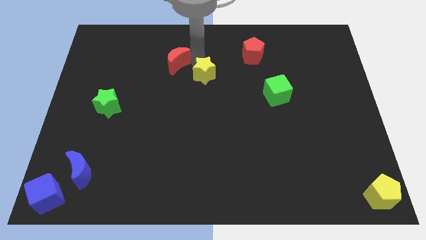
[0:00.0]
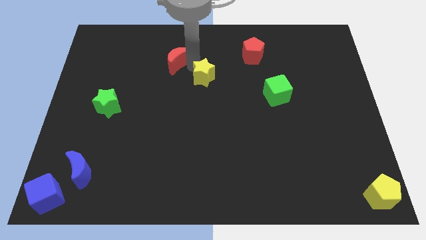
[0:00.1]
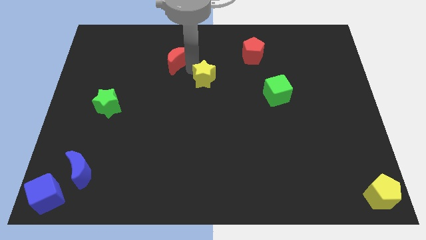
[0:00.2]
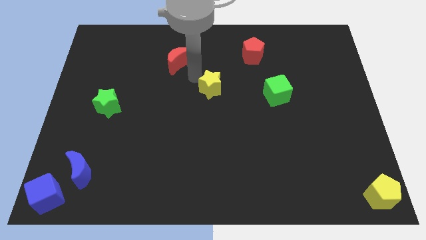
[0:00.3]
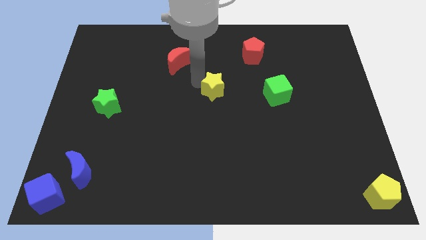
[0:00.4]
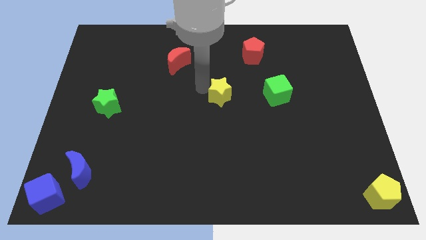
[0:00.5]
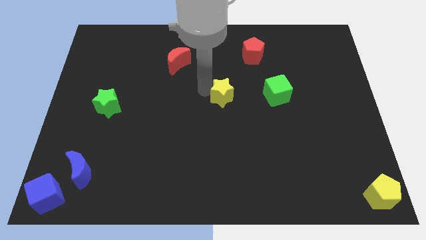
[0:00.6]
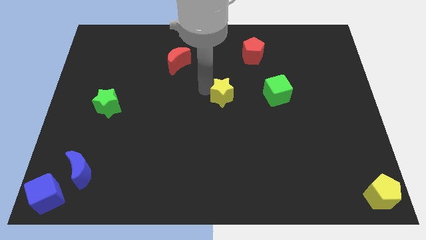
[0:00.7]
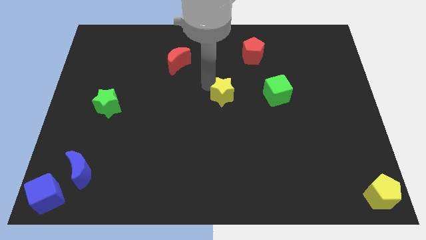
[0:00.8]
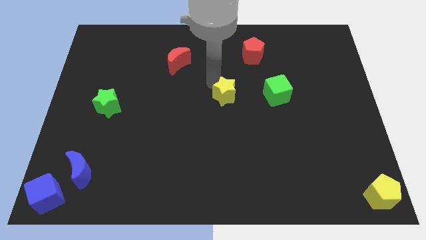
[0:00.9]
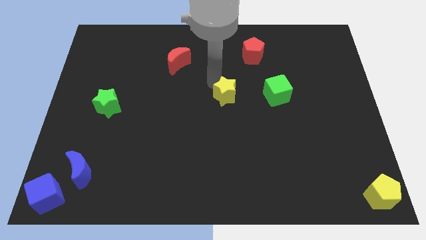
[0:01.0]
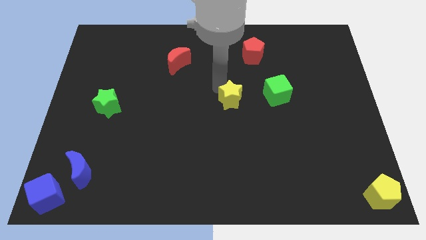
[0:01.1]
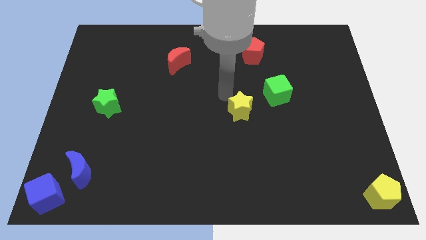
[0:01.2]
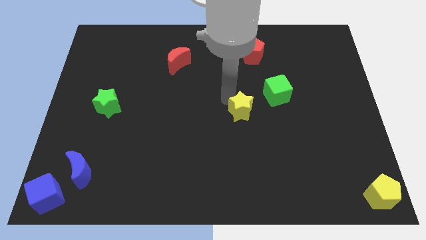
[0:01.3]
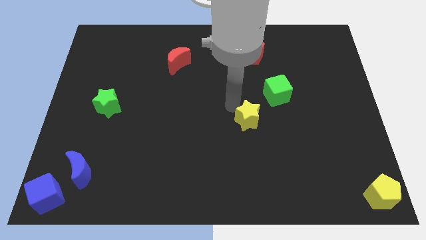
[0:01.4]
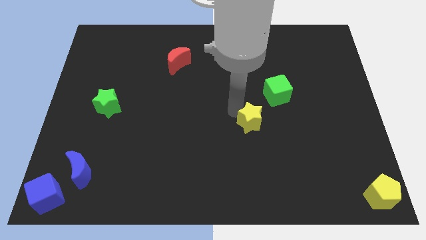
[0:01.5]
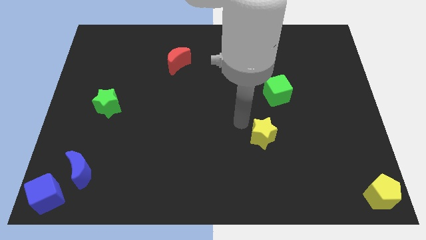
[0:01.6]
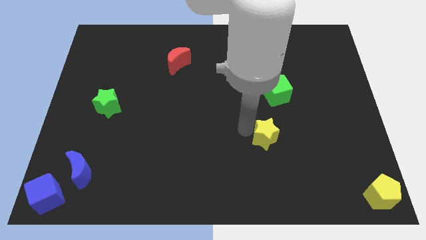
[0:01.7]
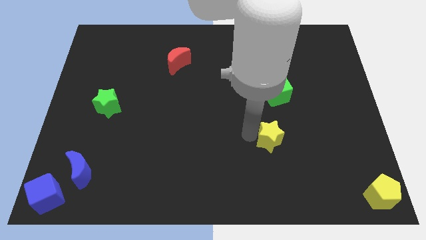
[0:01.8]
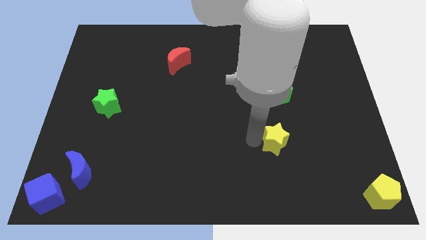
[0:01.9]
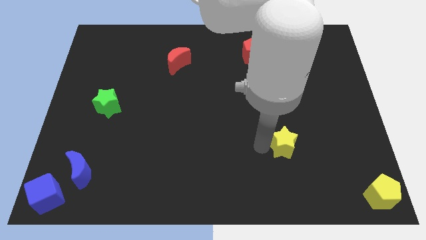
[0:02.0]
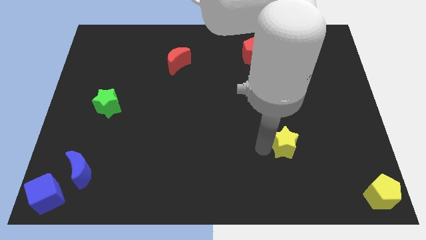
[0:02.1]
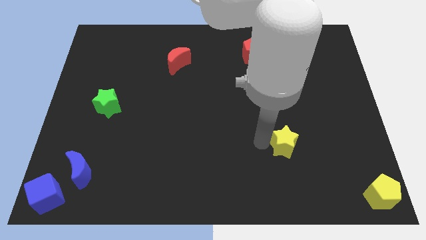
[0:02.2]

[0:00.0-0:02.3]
move the yellow star down to the green cube

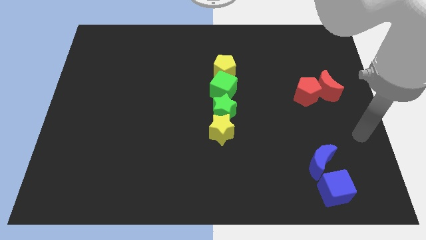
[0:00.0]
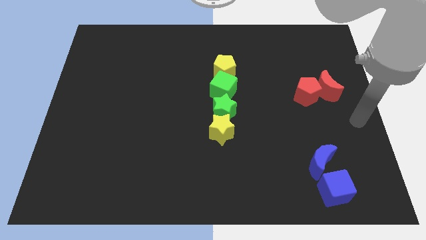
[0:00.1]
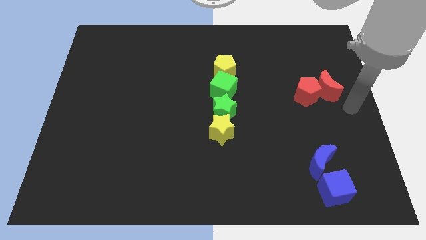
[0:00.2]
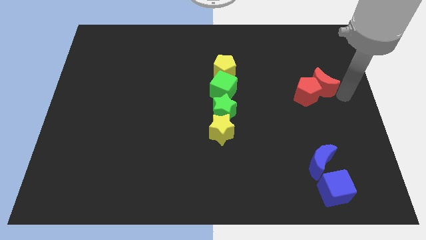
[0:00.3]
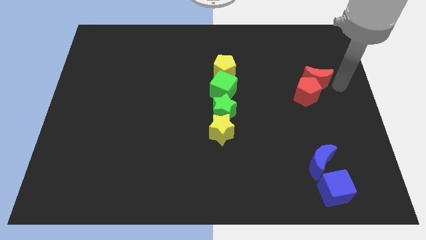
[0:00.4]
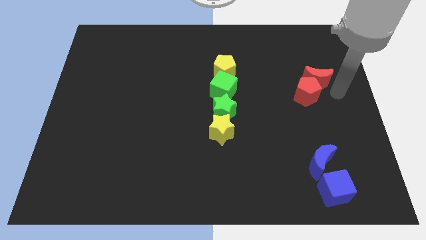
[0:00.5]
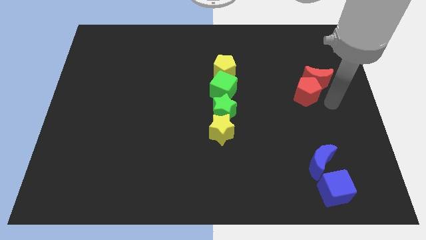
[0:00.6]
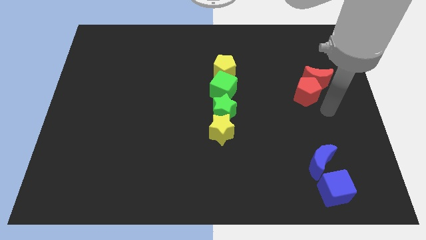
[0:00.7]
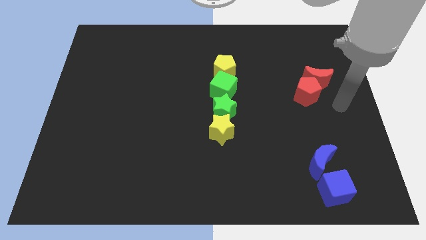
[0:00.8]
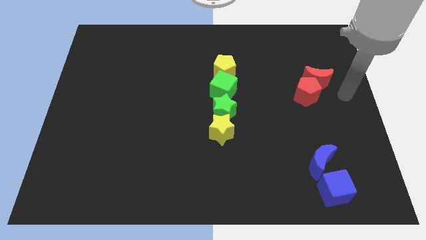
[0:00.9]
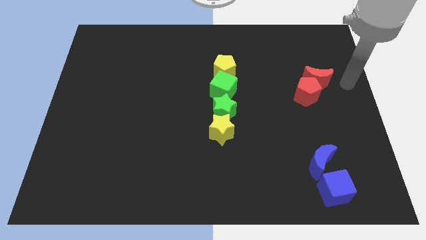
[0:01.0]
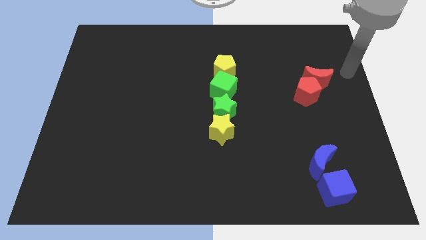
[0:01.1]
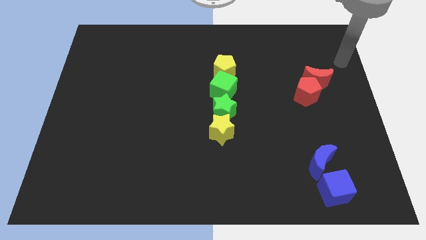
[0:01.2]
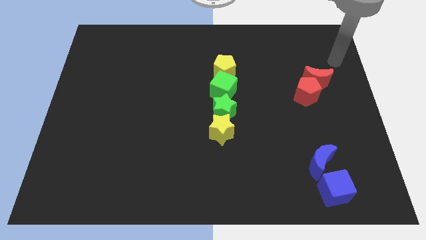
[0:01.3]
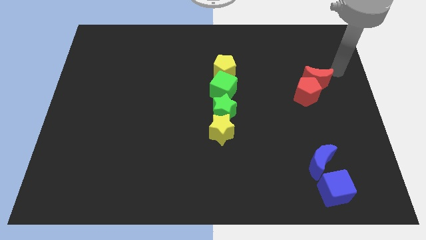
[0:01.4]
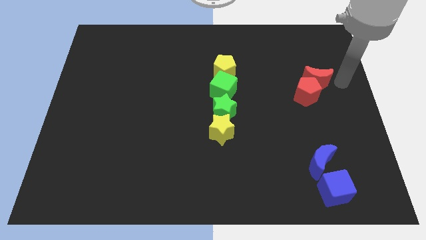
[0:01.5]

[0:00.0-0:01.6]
push the red crescent slightly top

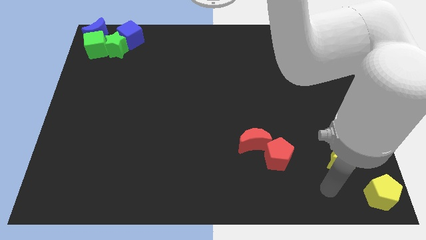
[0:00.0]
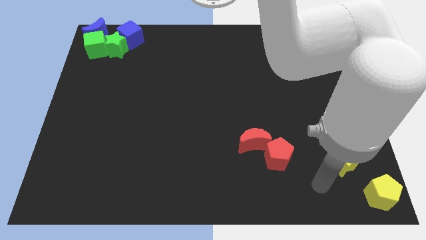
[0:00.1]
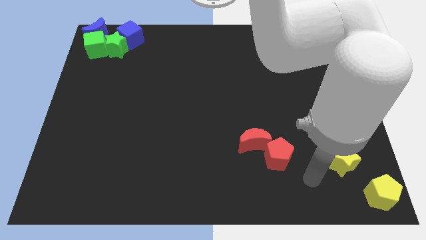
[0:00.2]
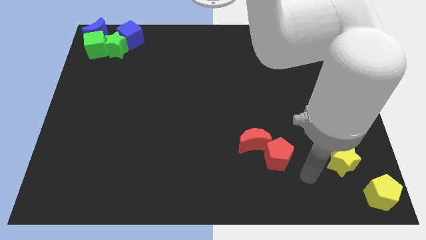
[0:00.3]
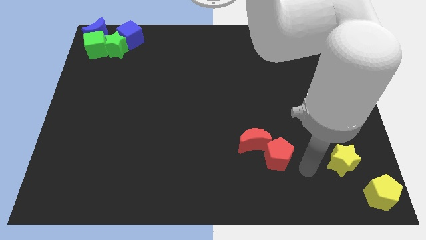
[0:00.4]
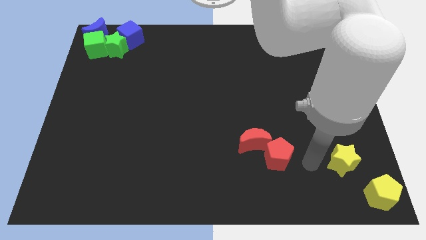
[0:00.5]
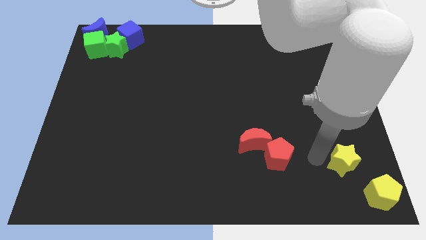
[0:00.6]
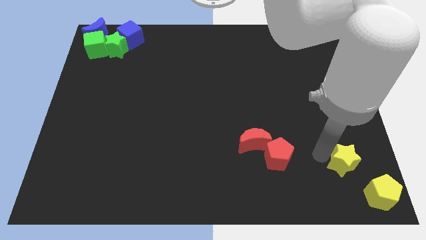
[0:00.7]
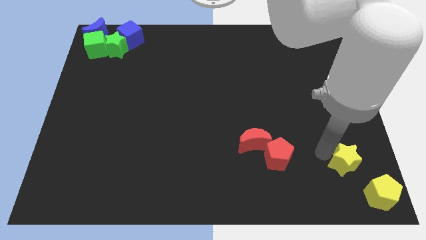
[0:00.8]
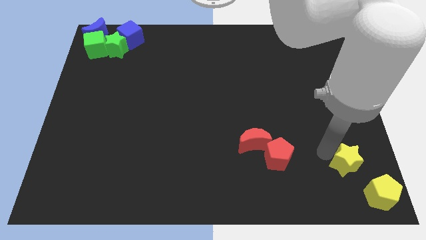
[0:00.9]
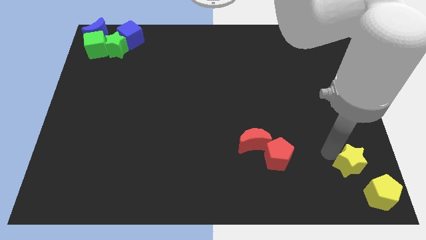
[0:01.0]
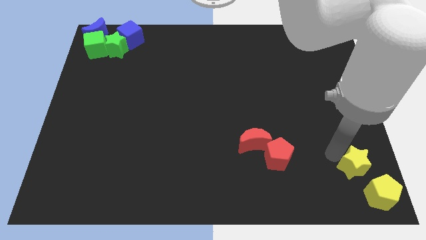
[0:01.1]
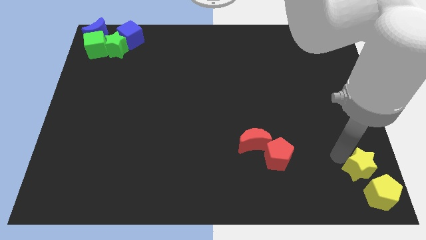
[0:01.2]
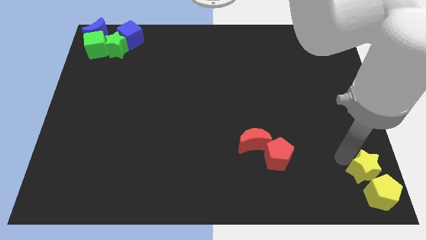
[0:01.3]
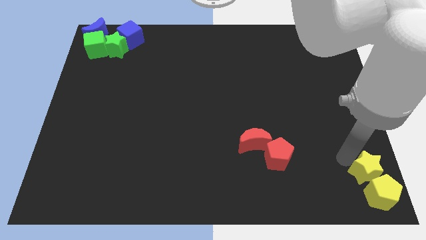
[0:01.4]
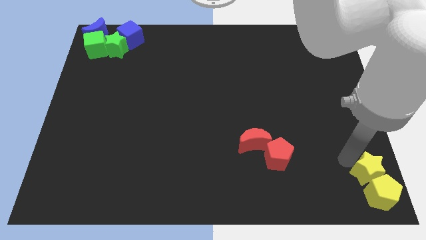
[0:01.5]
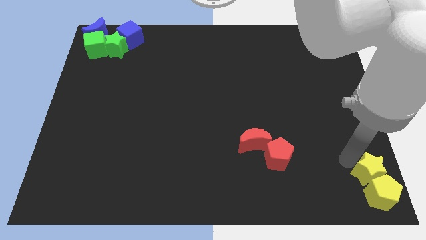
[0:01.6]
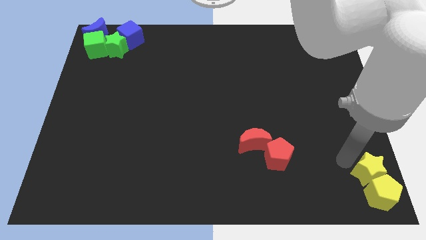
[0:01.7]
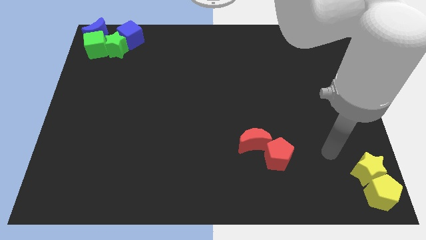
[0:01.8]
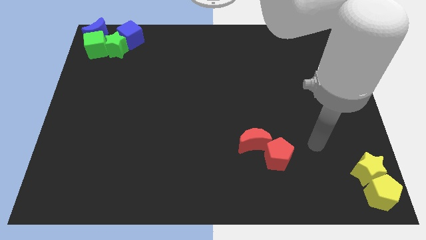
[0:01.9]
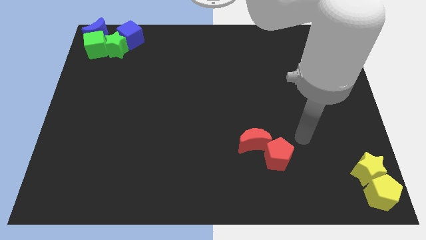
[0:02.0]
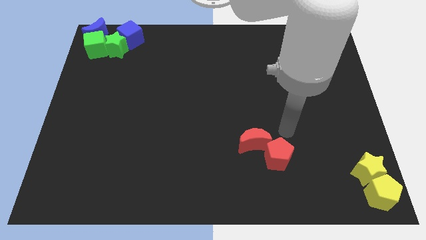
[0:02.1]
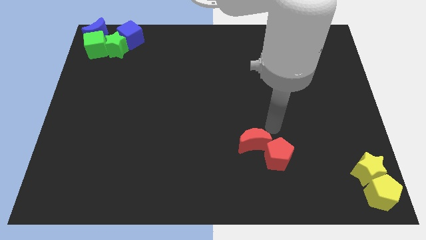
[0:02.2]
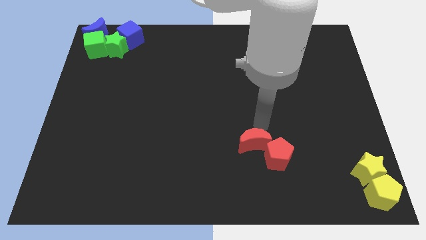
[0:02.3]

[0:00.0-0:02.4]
push the yellow star close to the yellow pentagon

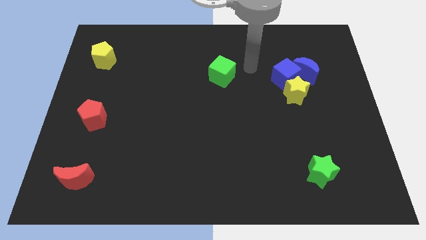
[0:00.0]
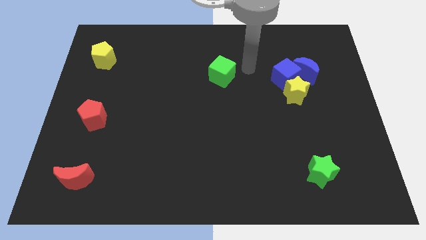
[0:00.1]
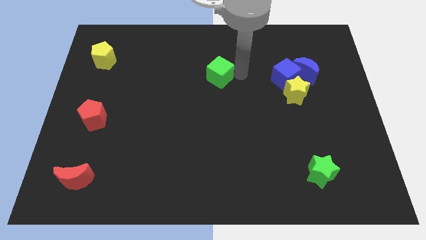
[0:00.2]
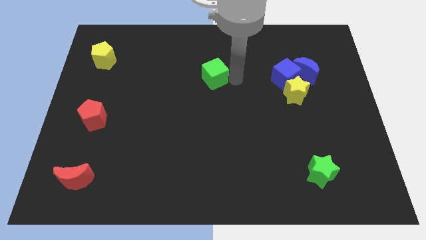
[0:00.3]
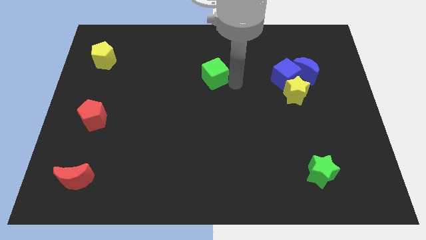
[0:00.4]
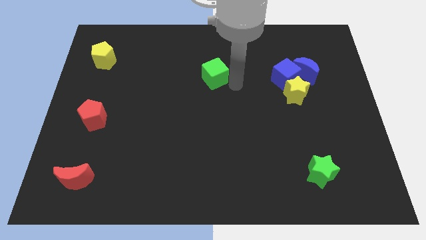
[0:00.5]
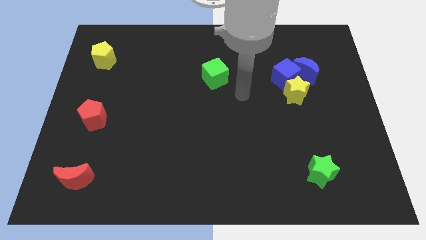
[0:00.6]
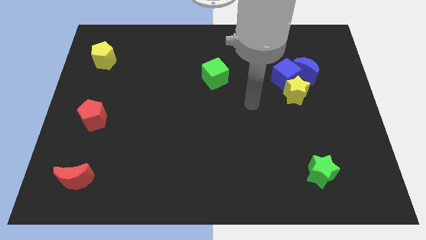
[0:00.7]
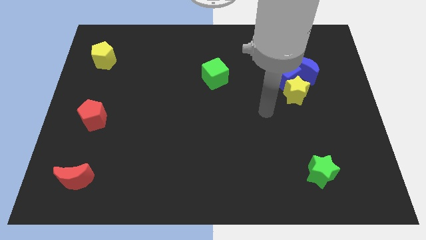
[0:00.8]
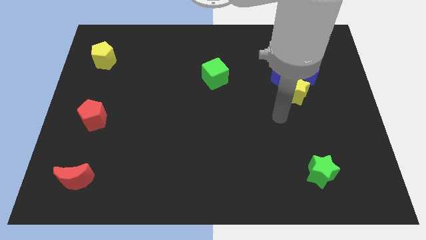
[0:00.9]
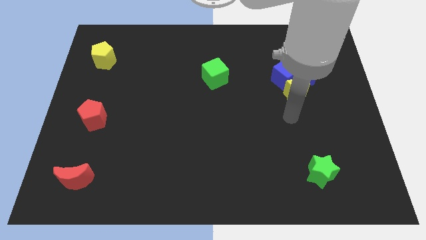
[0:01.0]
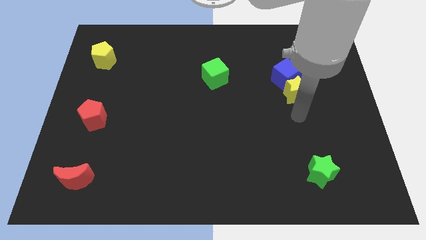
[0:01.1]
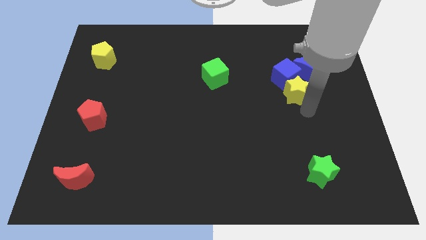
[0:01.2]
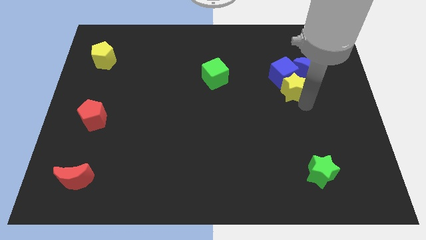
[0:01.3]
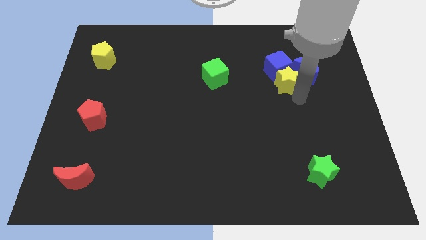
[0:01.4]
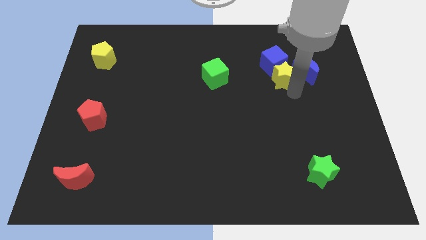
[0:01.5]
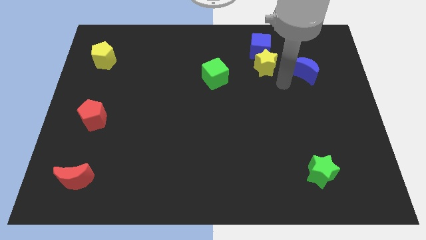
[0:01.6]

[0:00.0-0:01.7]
slightly tap the green cube towards the left side

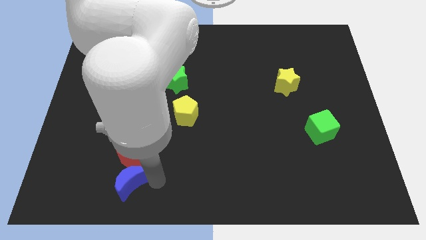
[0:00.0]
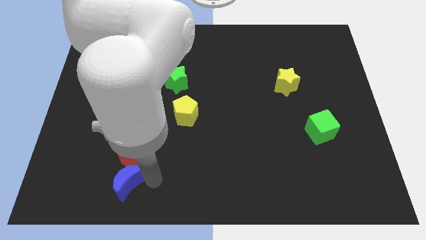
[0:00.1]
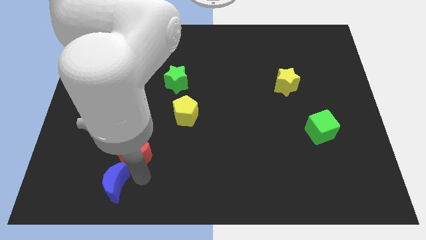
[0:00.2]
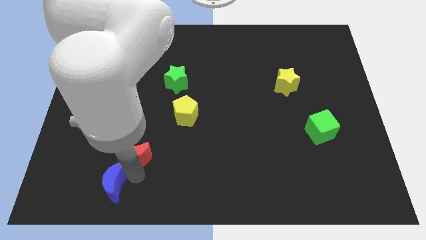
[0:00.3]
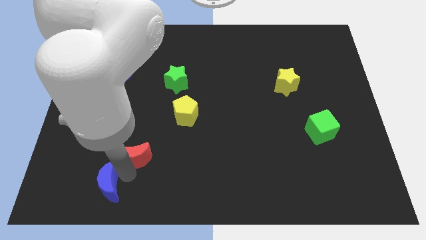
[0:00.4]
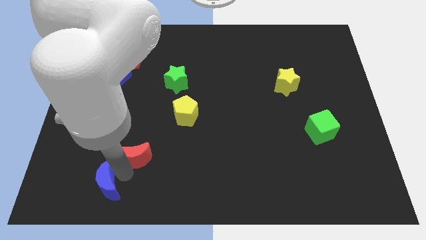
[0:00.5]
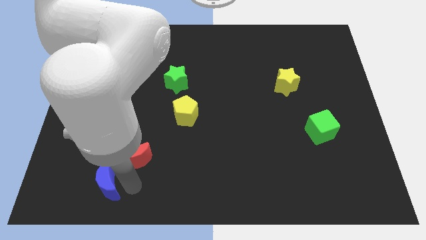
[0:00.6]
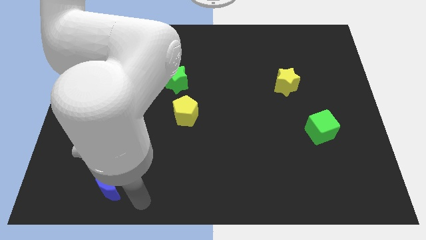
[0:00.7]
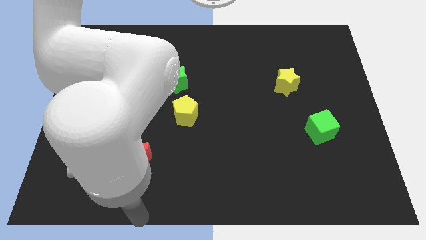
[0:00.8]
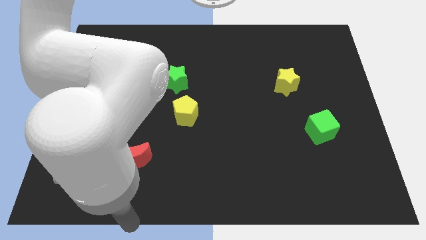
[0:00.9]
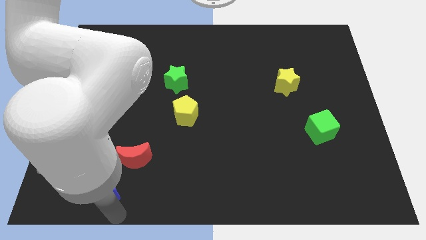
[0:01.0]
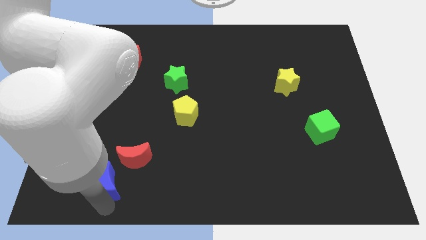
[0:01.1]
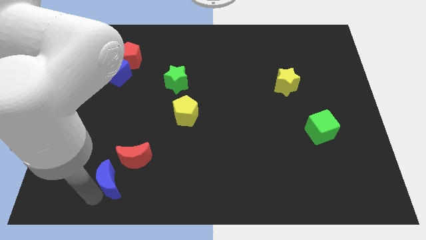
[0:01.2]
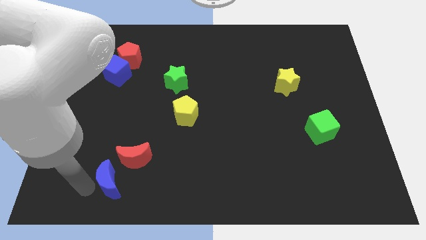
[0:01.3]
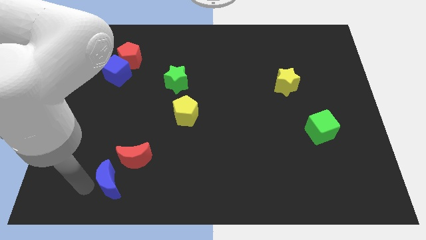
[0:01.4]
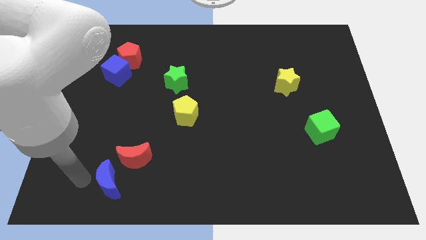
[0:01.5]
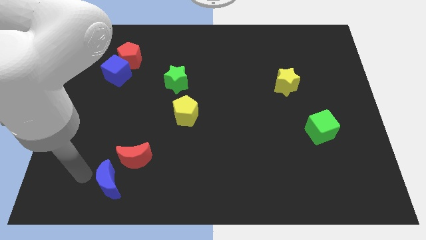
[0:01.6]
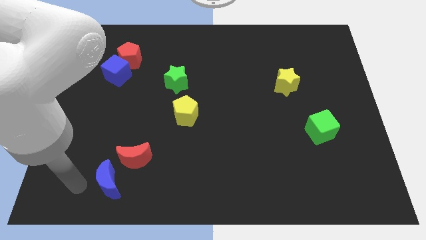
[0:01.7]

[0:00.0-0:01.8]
move your arm to the left of the blue moon
